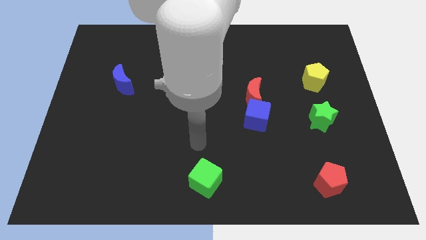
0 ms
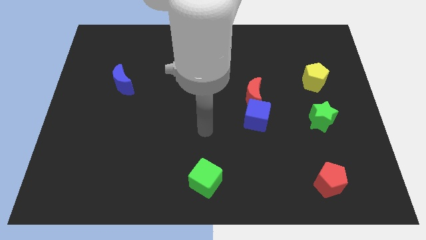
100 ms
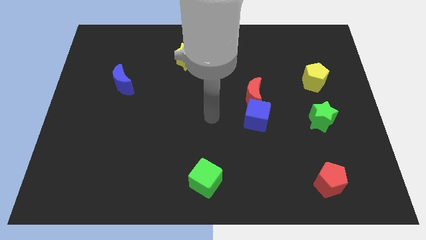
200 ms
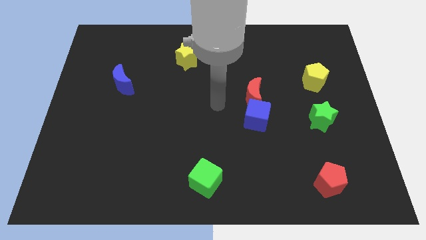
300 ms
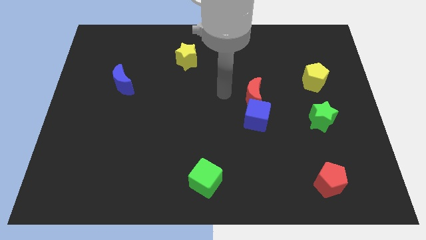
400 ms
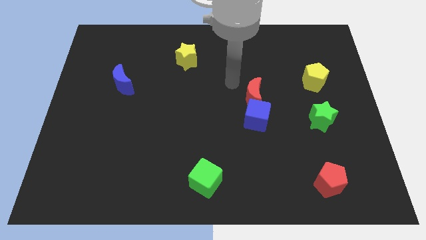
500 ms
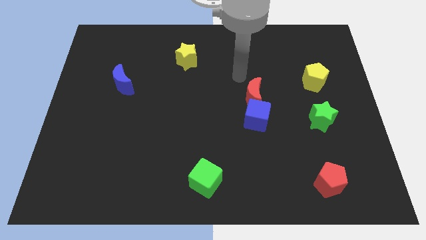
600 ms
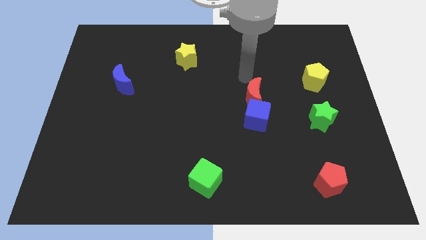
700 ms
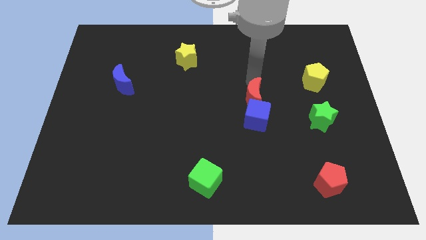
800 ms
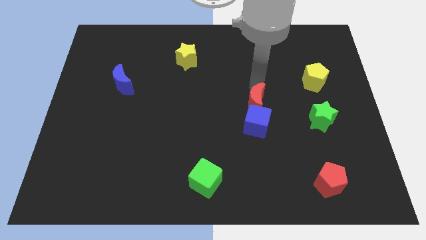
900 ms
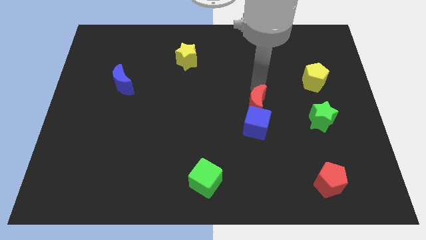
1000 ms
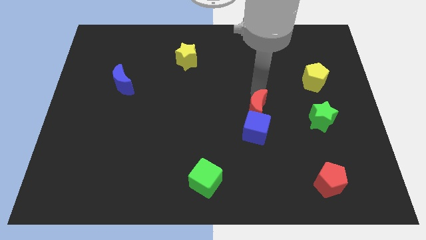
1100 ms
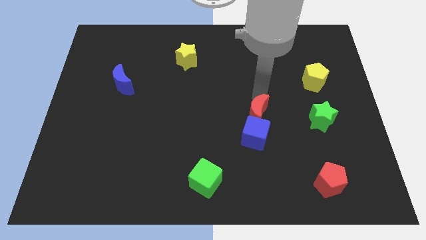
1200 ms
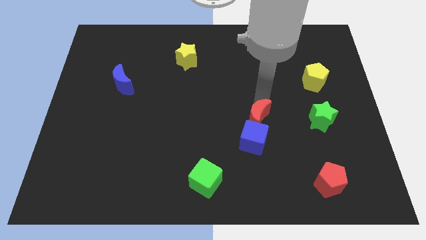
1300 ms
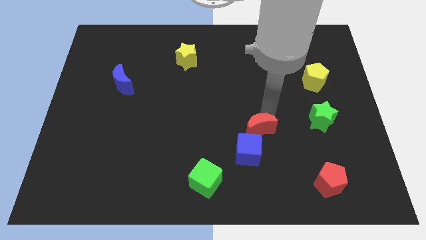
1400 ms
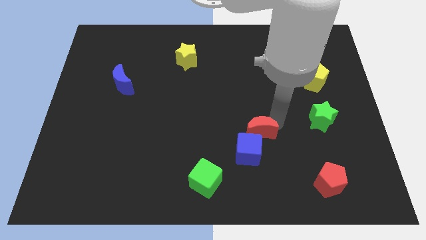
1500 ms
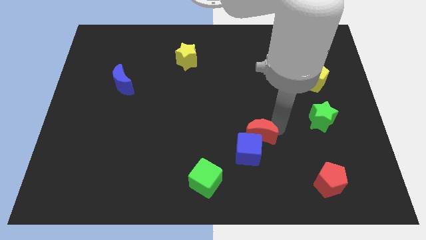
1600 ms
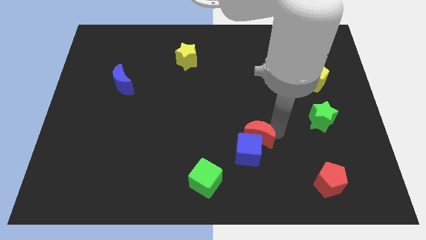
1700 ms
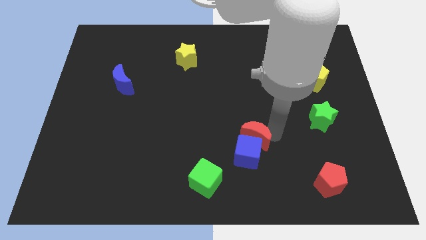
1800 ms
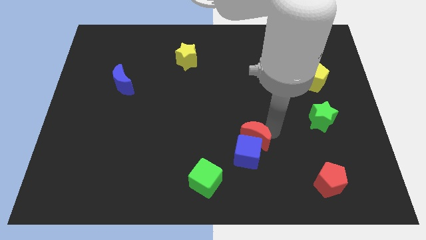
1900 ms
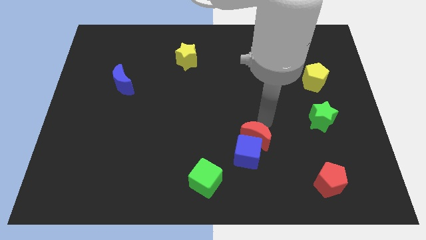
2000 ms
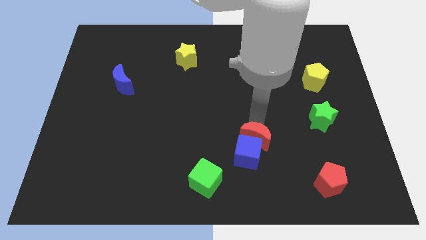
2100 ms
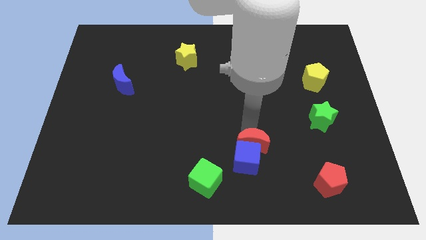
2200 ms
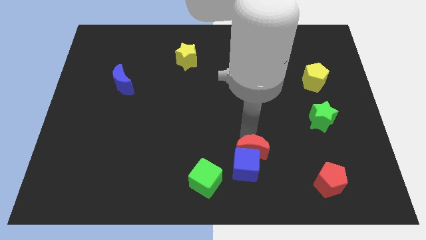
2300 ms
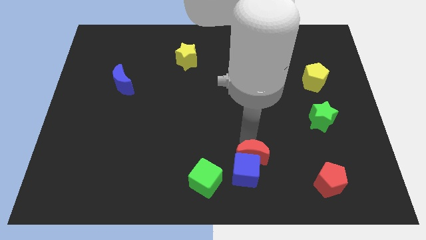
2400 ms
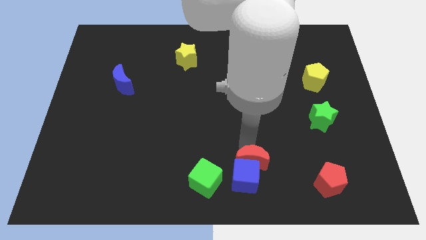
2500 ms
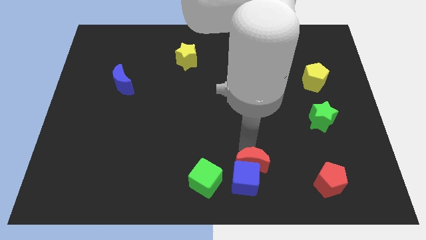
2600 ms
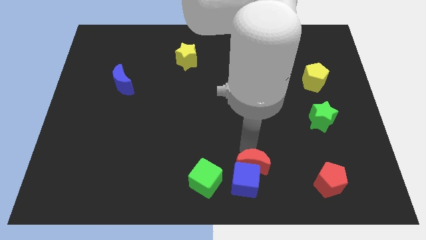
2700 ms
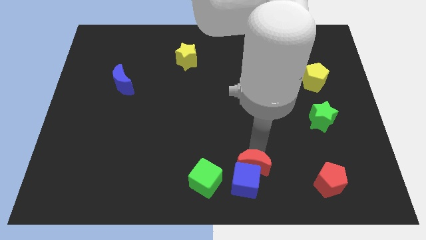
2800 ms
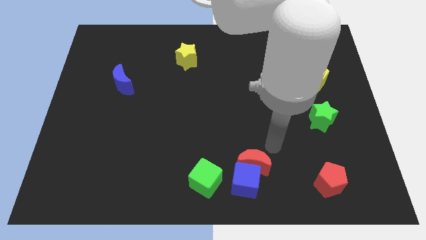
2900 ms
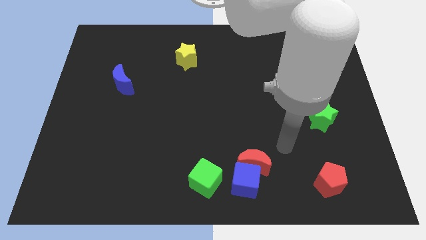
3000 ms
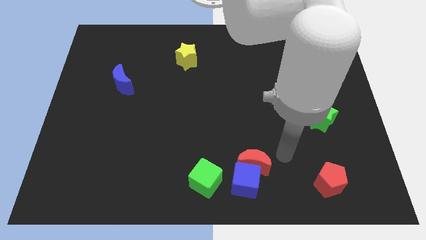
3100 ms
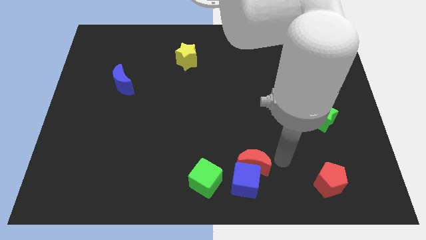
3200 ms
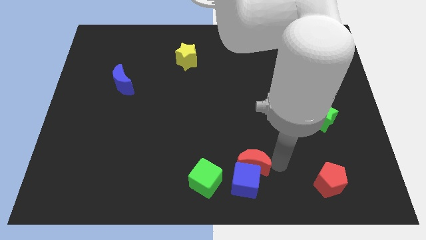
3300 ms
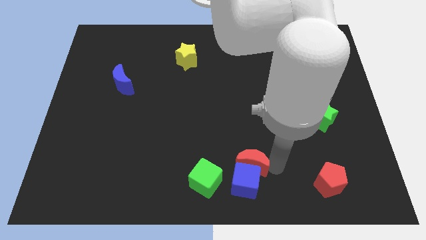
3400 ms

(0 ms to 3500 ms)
push the blue cube to the right side of the green cube with the red moon

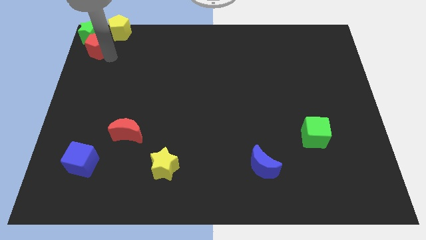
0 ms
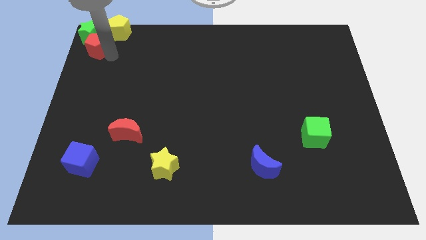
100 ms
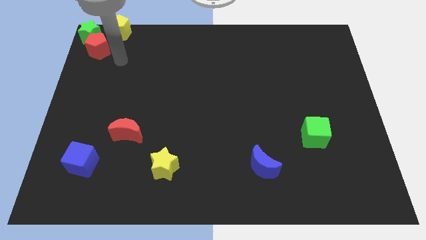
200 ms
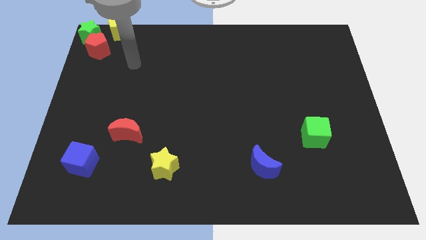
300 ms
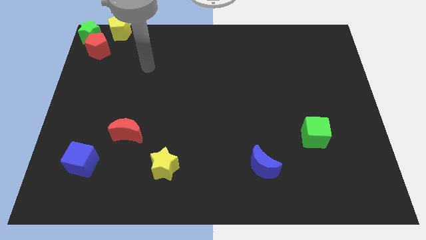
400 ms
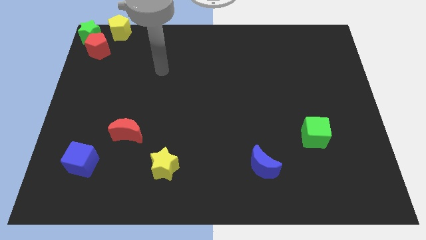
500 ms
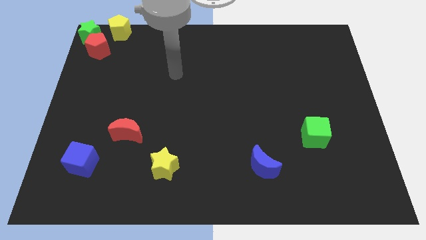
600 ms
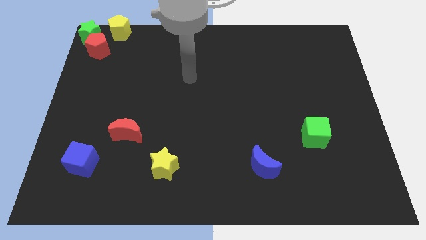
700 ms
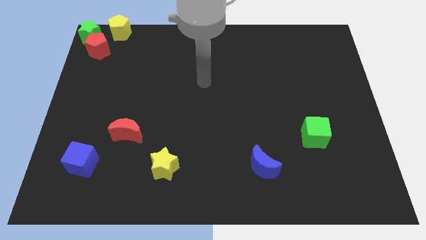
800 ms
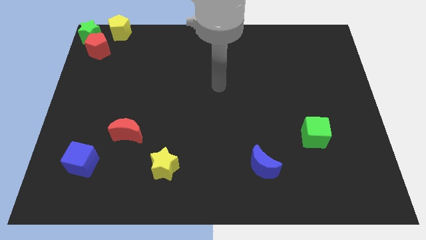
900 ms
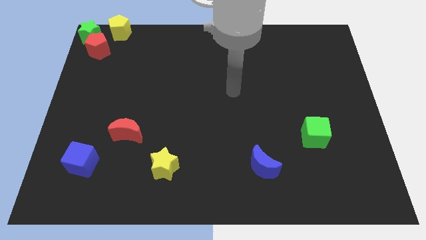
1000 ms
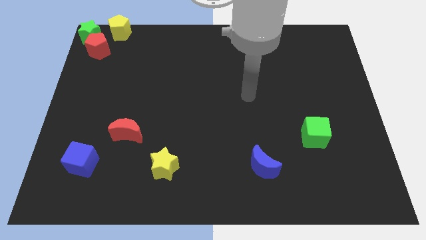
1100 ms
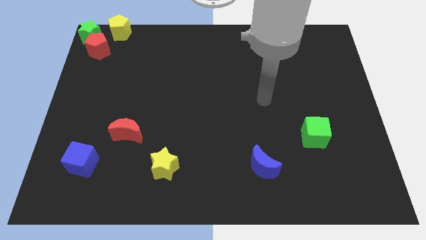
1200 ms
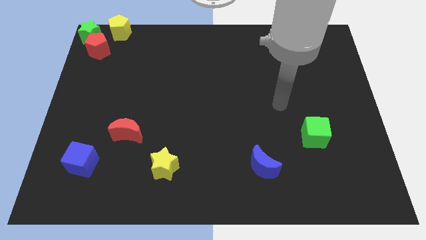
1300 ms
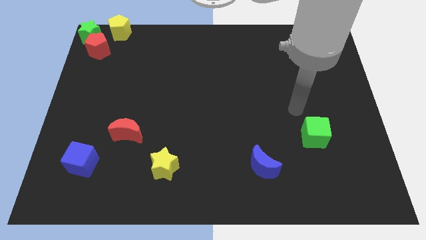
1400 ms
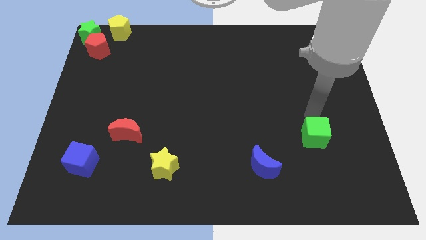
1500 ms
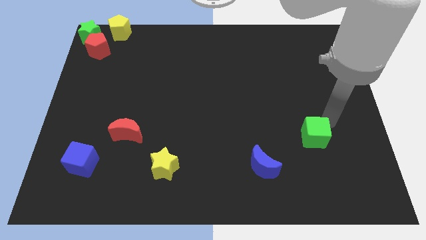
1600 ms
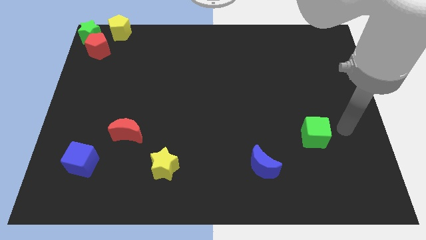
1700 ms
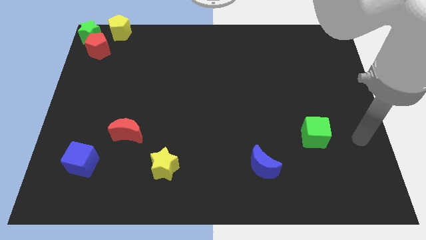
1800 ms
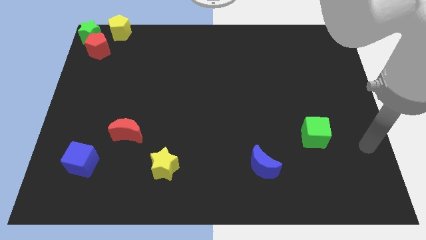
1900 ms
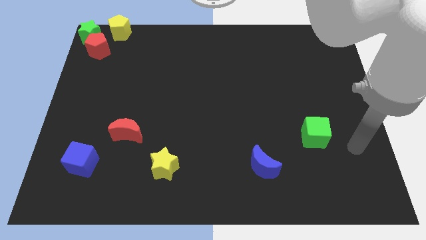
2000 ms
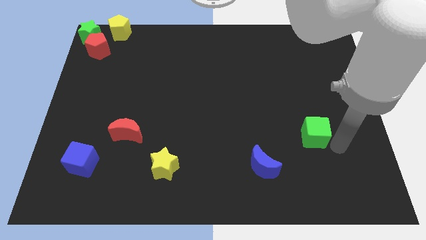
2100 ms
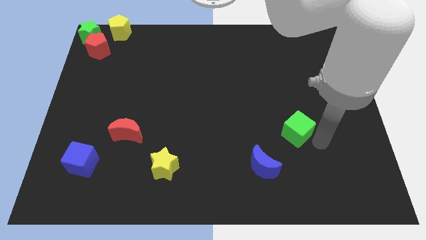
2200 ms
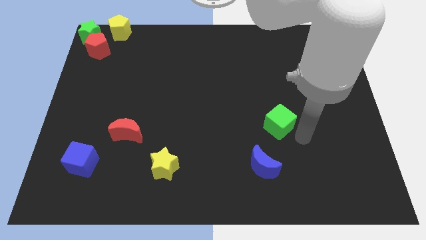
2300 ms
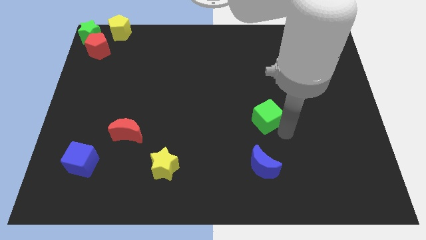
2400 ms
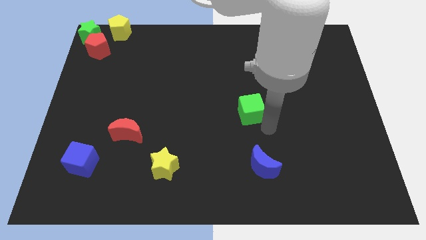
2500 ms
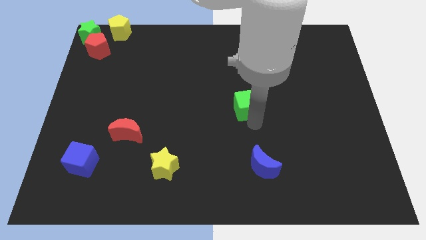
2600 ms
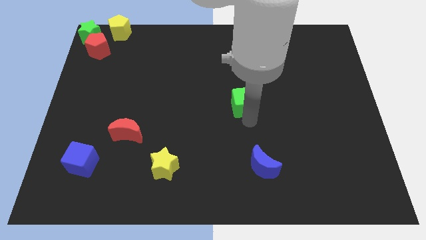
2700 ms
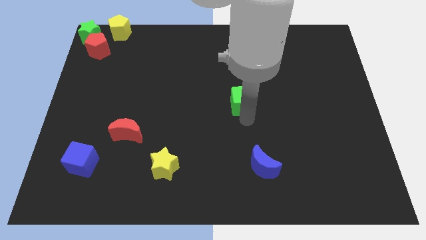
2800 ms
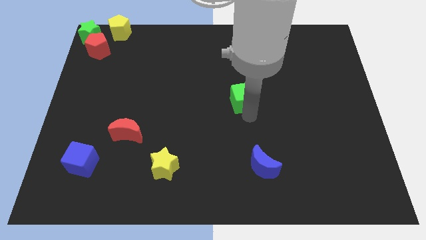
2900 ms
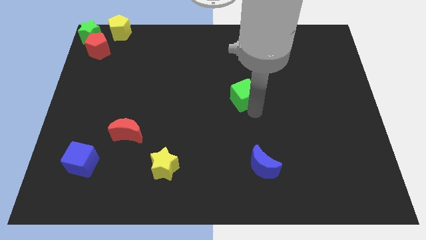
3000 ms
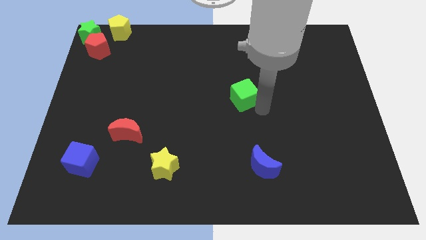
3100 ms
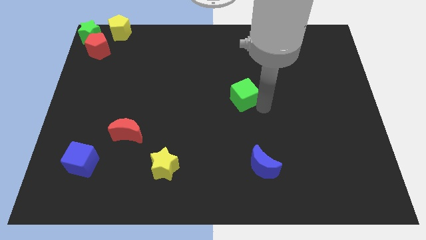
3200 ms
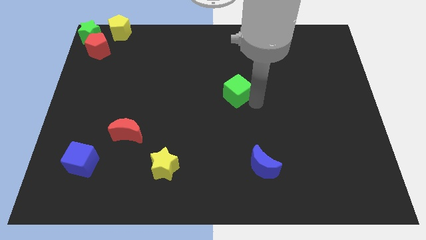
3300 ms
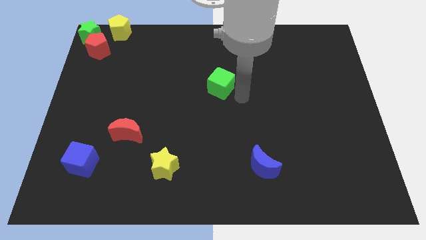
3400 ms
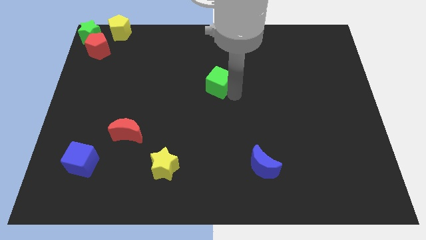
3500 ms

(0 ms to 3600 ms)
push the green cube diagonally top left to the blue moon

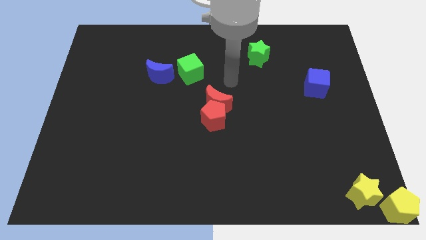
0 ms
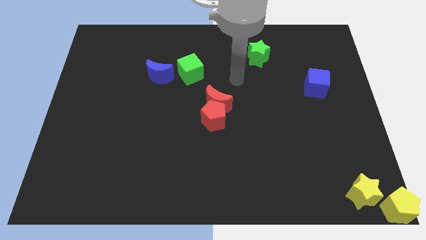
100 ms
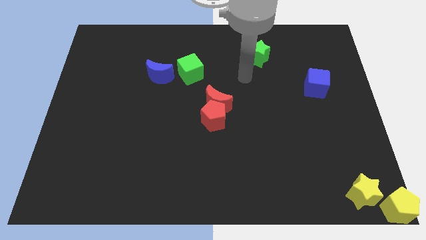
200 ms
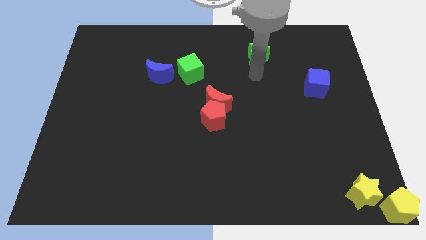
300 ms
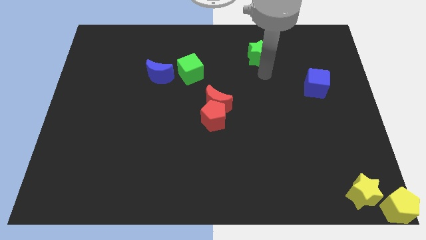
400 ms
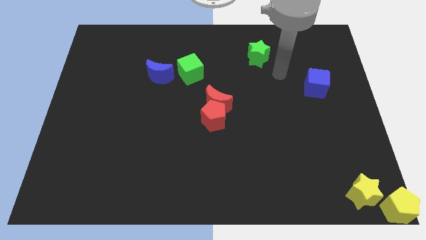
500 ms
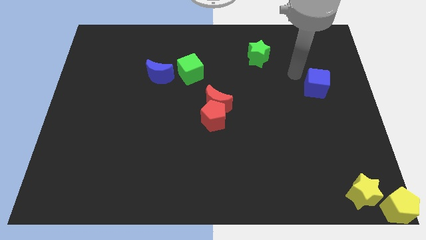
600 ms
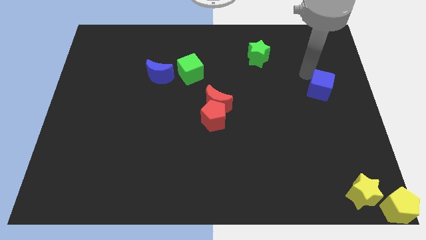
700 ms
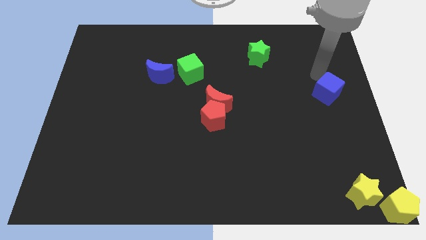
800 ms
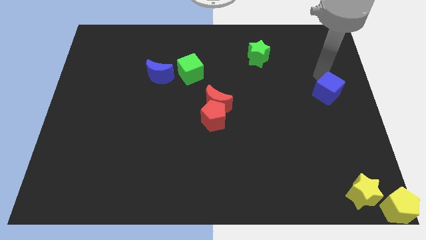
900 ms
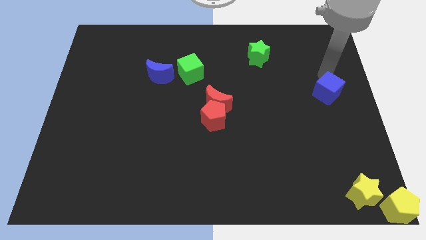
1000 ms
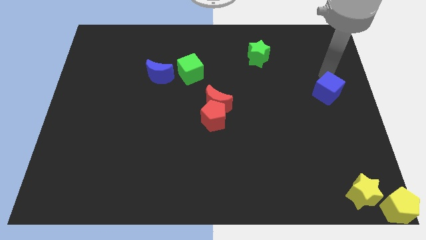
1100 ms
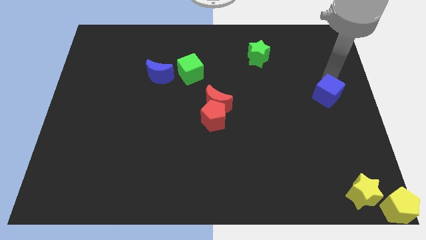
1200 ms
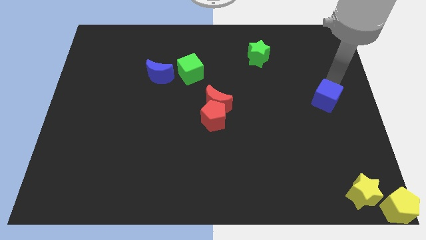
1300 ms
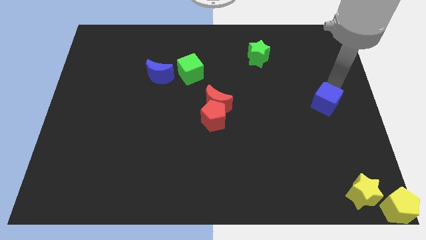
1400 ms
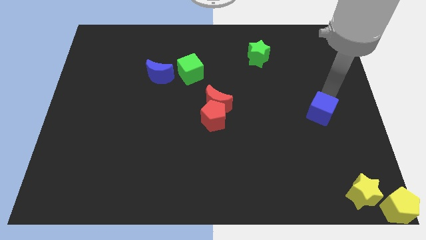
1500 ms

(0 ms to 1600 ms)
move the arm towards the blue cube
